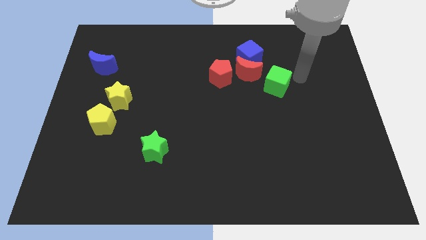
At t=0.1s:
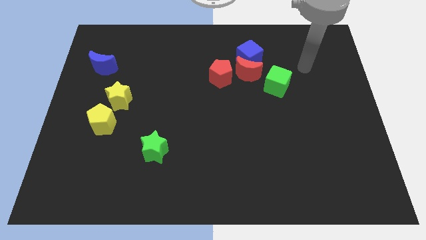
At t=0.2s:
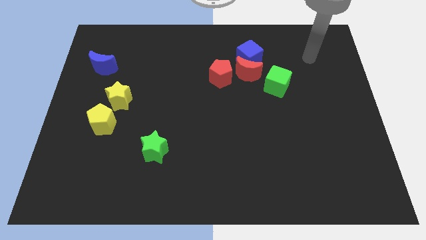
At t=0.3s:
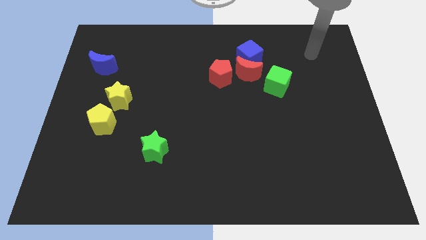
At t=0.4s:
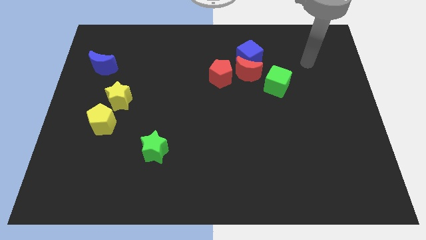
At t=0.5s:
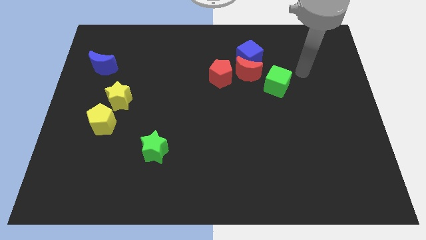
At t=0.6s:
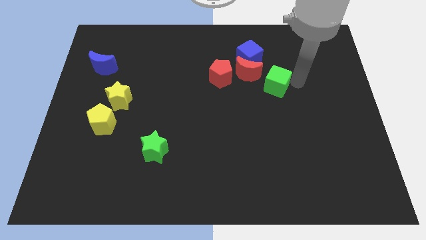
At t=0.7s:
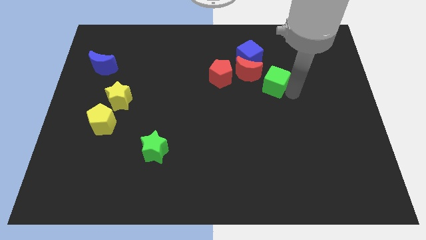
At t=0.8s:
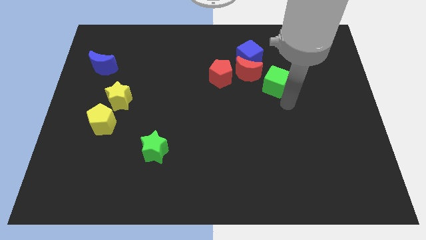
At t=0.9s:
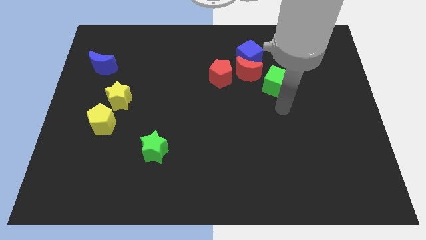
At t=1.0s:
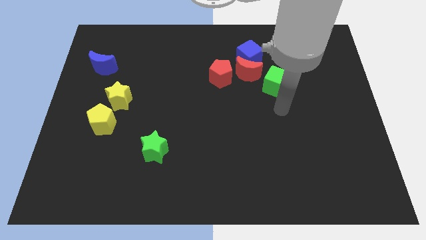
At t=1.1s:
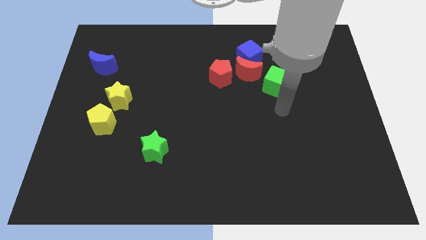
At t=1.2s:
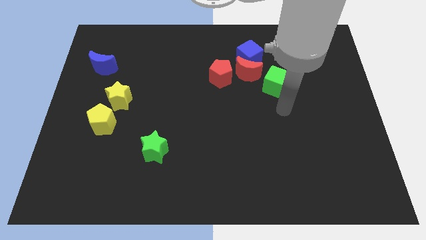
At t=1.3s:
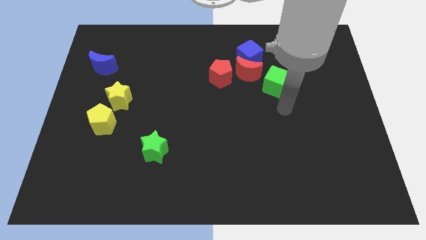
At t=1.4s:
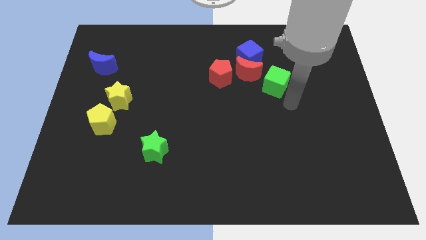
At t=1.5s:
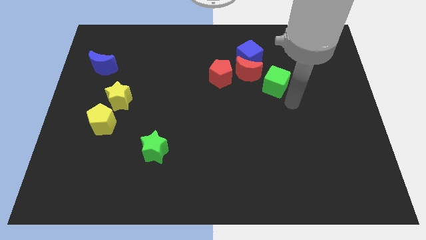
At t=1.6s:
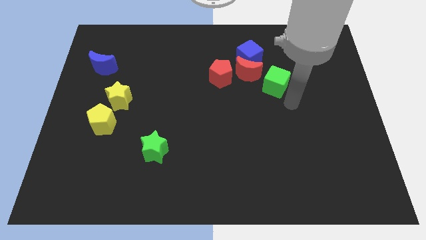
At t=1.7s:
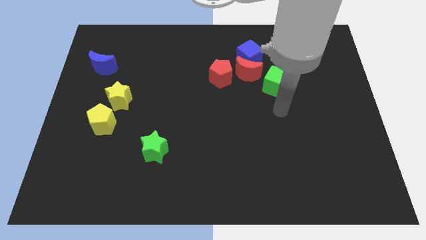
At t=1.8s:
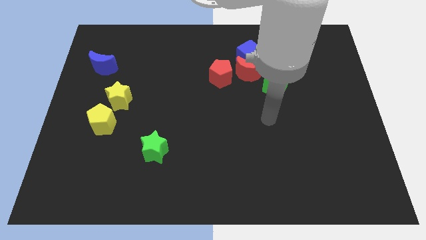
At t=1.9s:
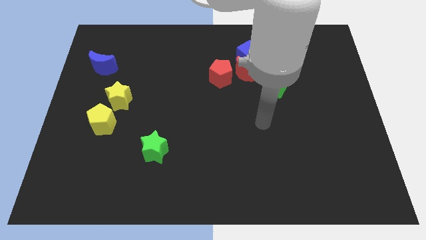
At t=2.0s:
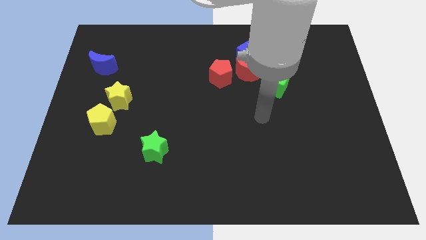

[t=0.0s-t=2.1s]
put your arm on the on the bottom side of the green cube

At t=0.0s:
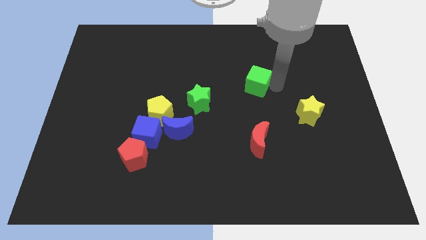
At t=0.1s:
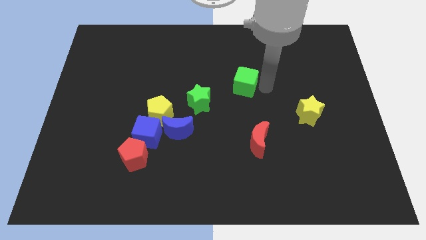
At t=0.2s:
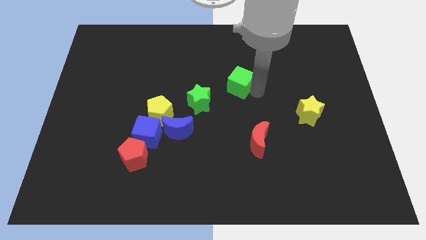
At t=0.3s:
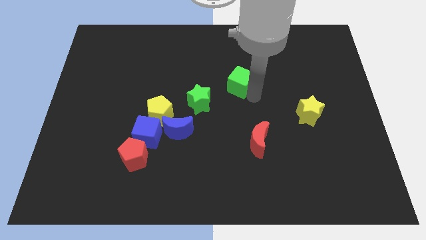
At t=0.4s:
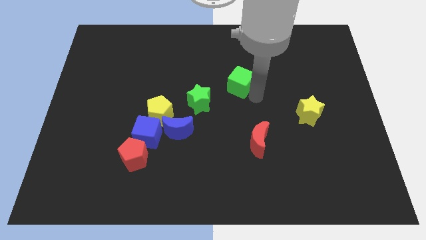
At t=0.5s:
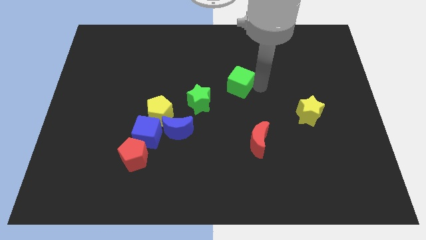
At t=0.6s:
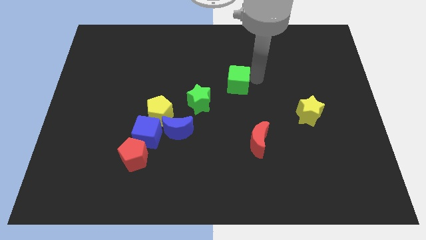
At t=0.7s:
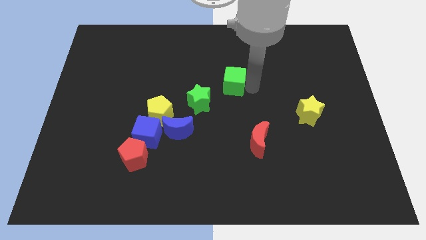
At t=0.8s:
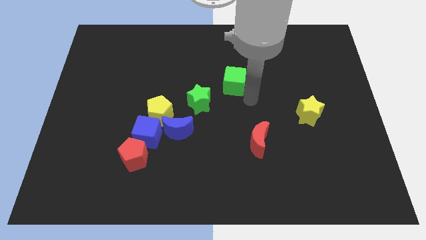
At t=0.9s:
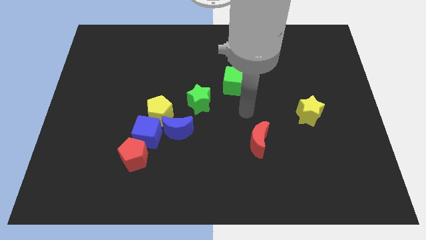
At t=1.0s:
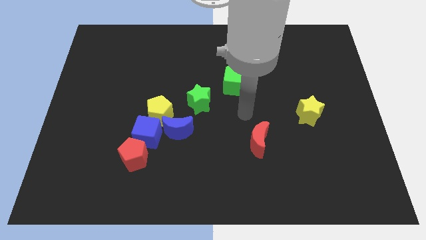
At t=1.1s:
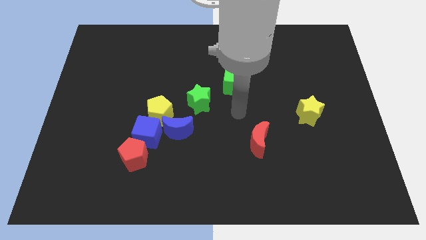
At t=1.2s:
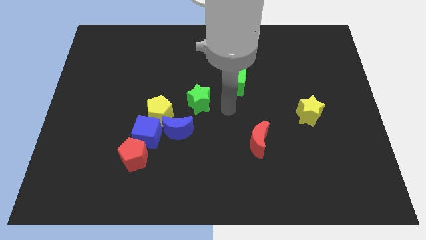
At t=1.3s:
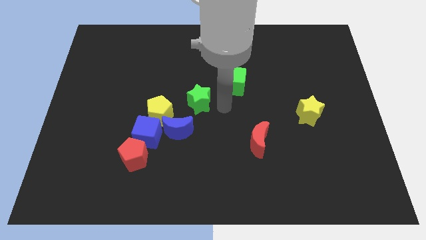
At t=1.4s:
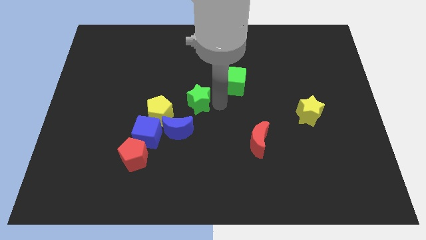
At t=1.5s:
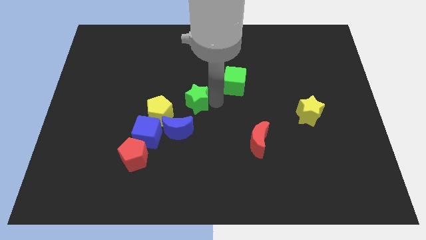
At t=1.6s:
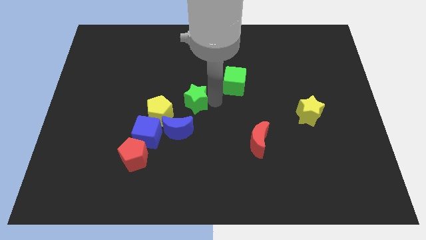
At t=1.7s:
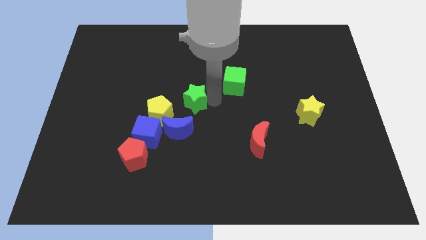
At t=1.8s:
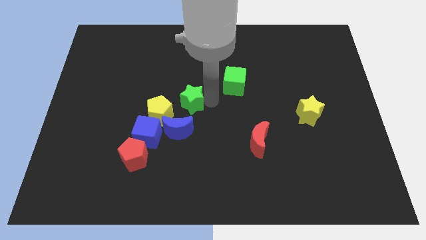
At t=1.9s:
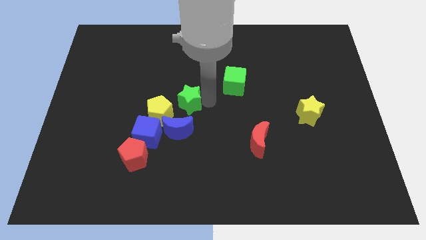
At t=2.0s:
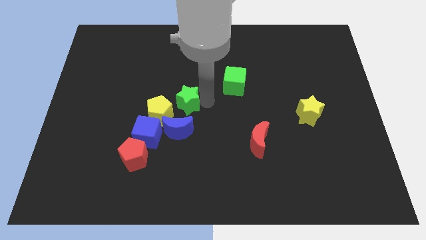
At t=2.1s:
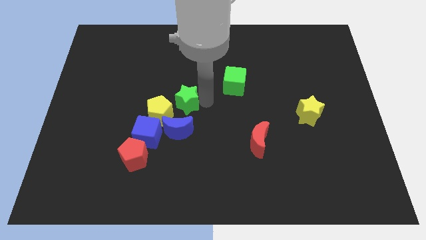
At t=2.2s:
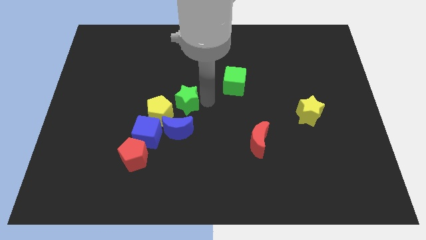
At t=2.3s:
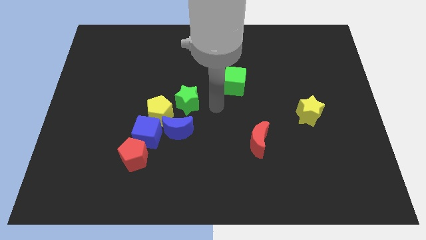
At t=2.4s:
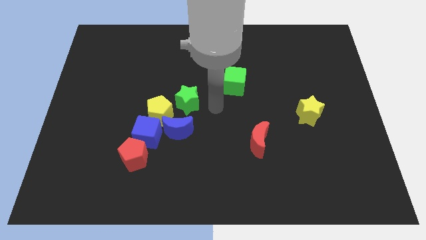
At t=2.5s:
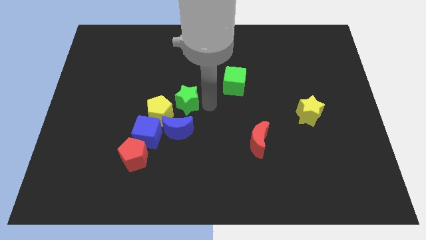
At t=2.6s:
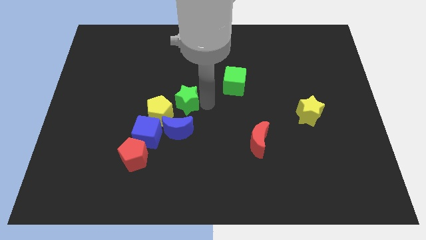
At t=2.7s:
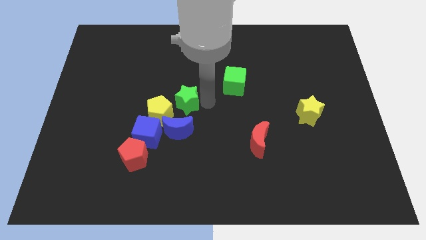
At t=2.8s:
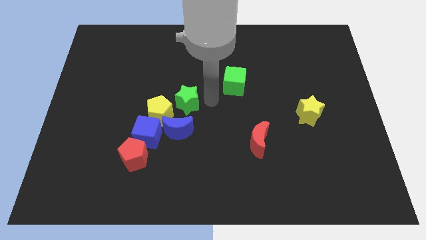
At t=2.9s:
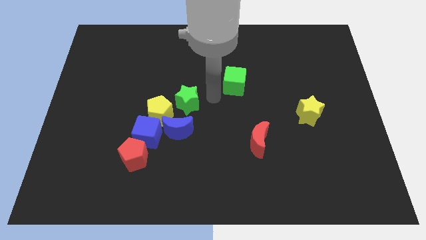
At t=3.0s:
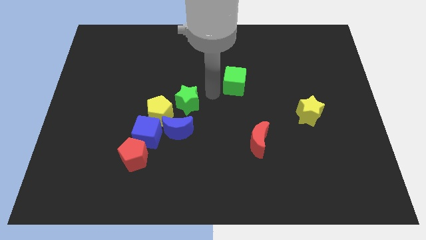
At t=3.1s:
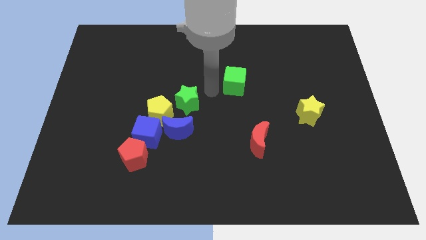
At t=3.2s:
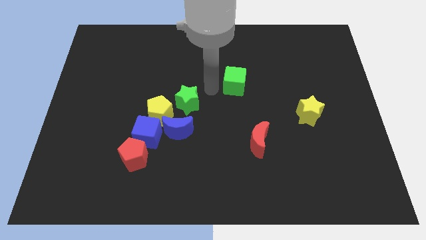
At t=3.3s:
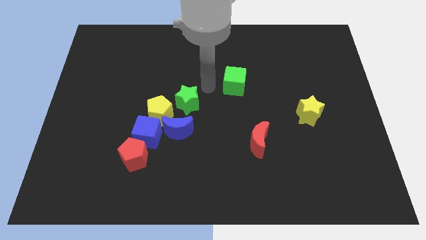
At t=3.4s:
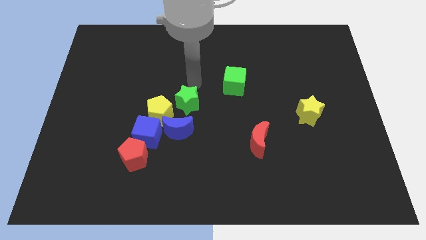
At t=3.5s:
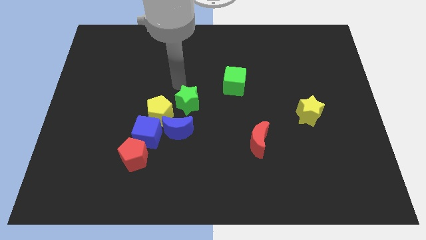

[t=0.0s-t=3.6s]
put both the green blocks diagonally on the top right side of the yellow pentagon

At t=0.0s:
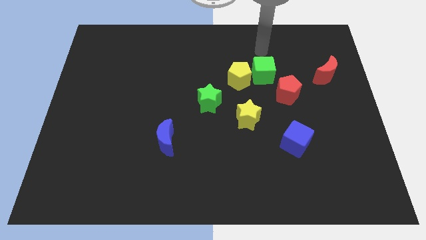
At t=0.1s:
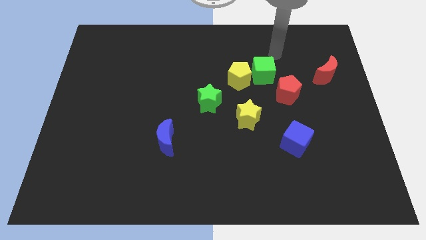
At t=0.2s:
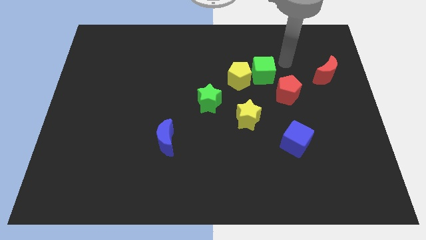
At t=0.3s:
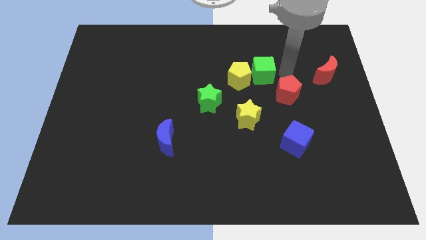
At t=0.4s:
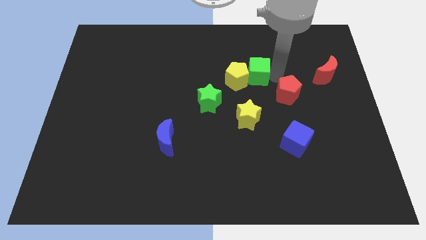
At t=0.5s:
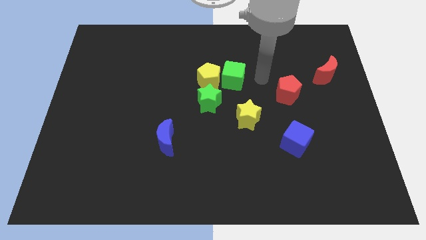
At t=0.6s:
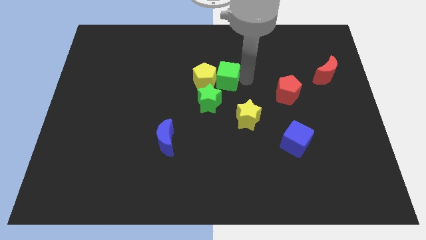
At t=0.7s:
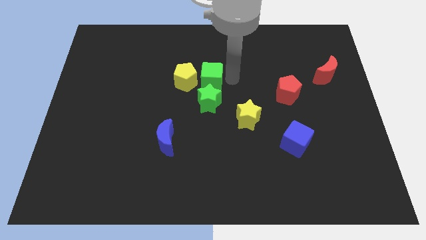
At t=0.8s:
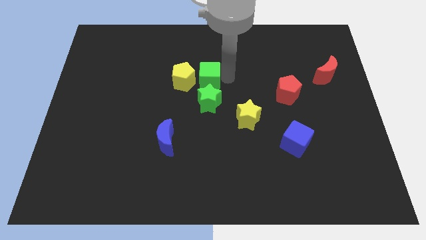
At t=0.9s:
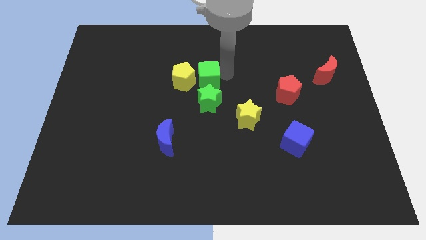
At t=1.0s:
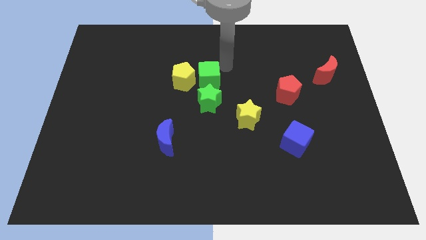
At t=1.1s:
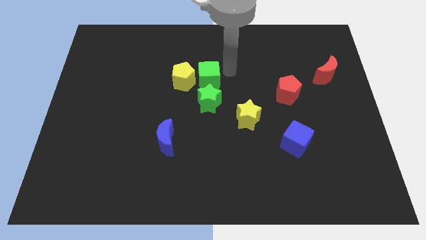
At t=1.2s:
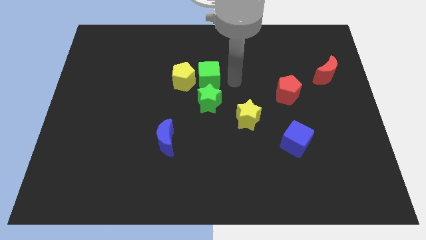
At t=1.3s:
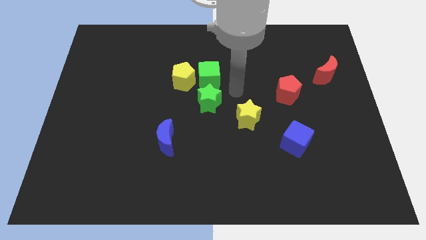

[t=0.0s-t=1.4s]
push the green cube along with the yellow pentagon to the left

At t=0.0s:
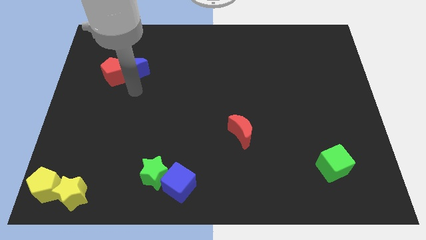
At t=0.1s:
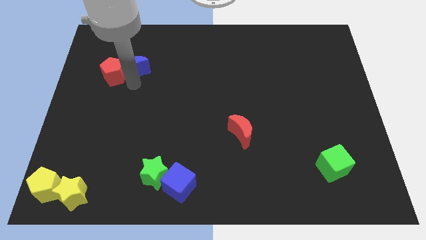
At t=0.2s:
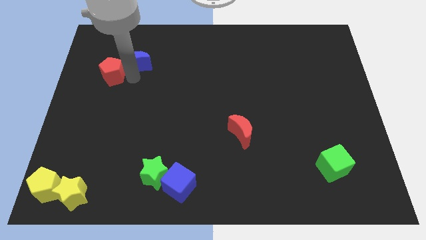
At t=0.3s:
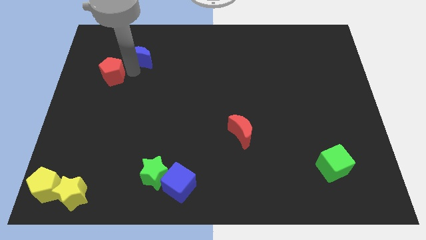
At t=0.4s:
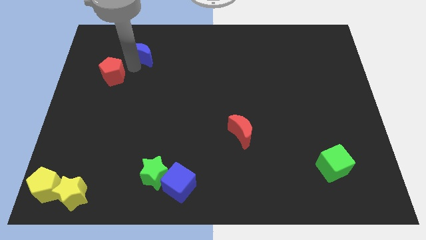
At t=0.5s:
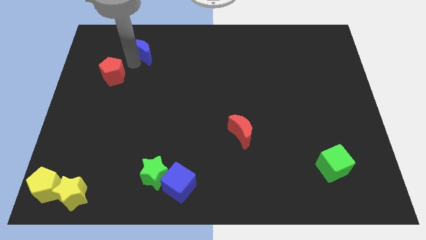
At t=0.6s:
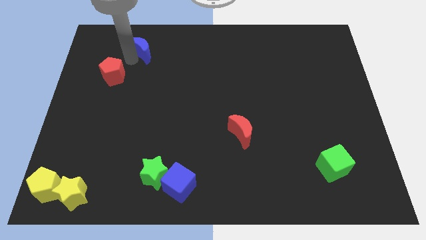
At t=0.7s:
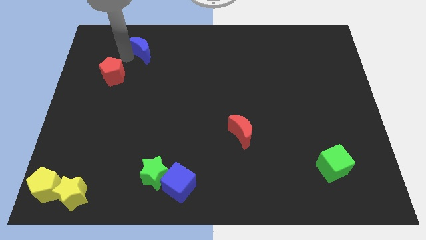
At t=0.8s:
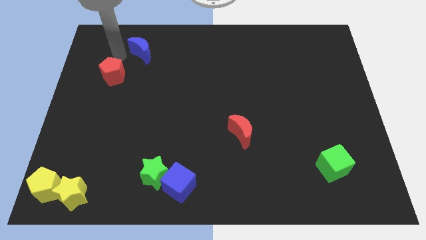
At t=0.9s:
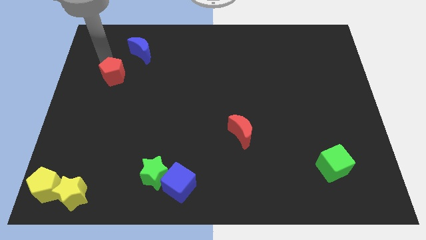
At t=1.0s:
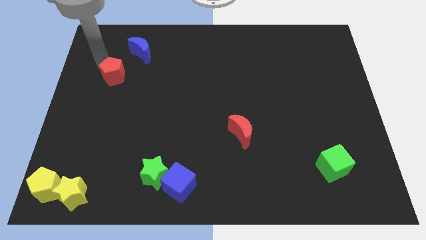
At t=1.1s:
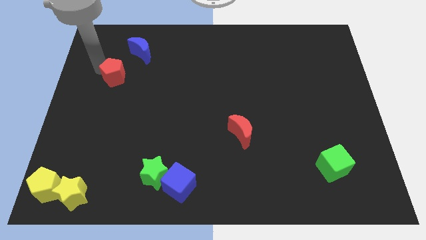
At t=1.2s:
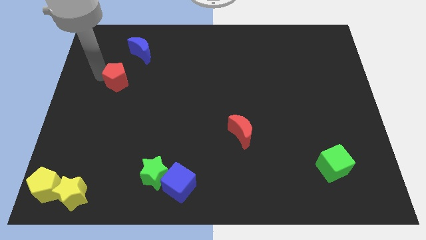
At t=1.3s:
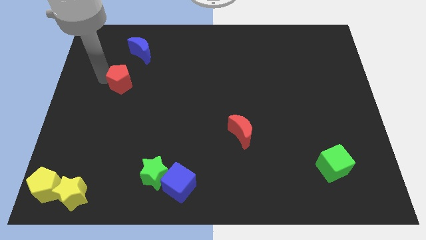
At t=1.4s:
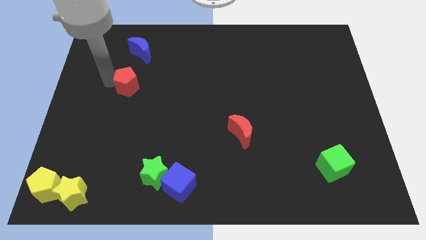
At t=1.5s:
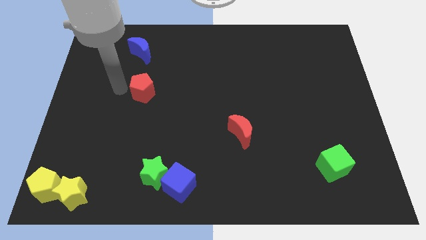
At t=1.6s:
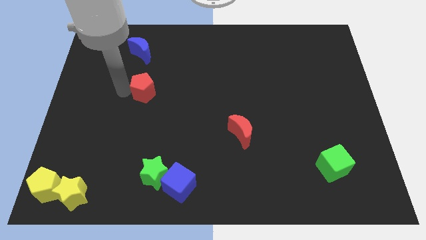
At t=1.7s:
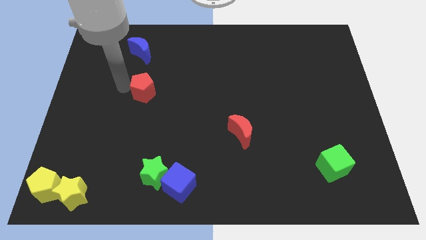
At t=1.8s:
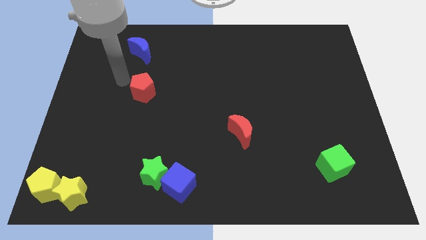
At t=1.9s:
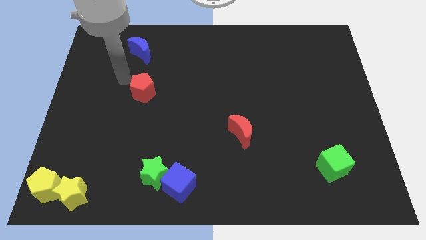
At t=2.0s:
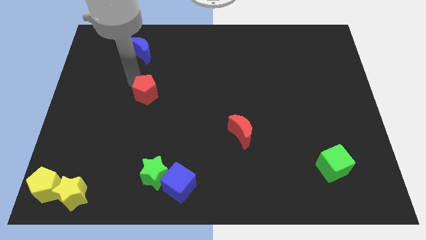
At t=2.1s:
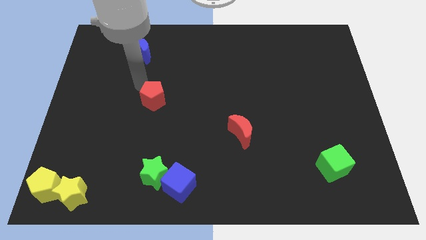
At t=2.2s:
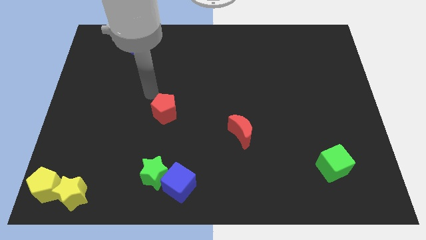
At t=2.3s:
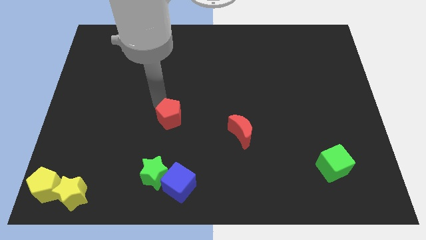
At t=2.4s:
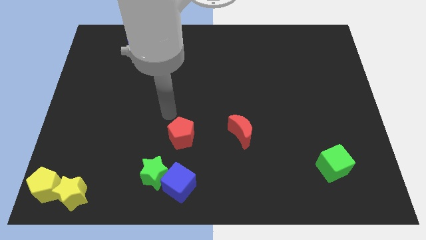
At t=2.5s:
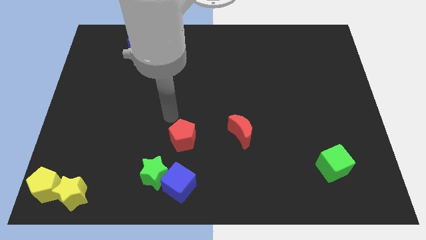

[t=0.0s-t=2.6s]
place red pentagon to the top of blue cube
